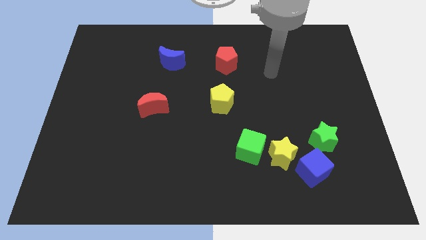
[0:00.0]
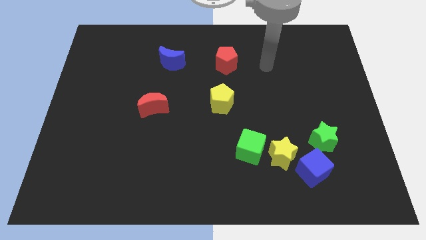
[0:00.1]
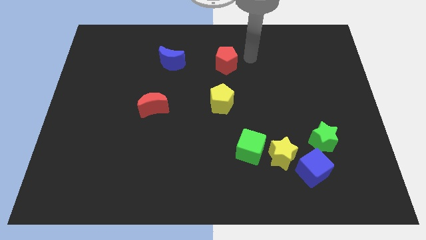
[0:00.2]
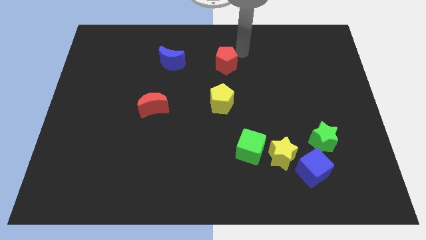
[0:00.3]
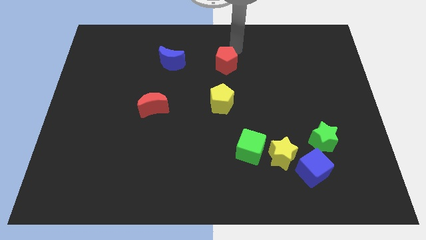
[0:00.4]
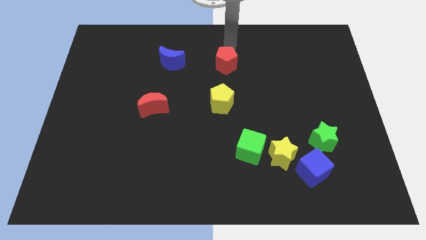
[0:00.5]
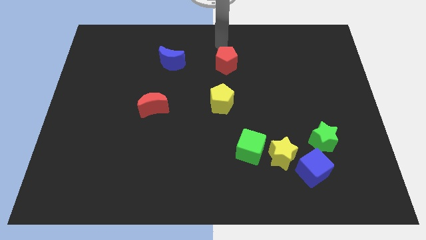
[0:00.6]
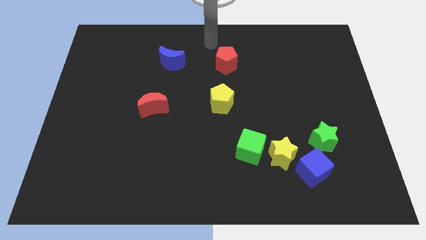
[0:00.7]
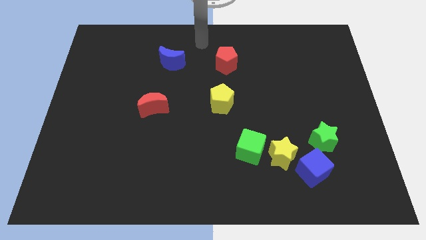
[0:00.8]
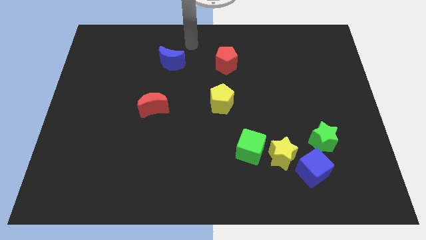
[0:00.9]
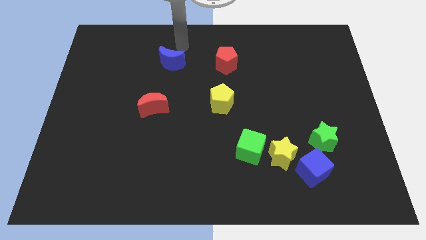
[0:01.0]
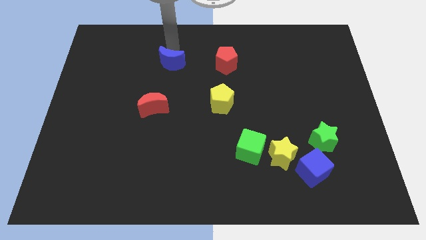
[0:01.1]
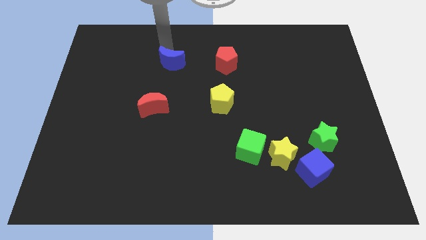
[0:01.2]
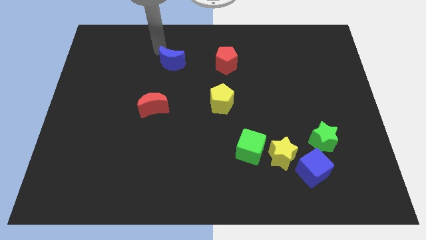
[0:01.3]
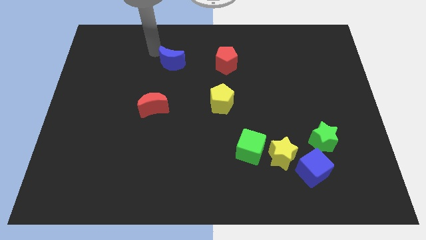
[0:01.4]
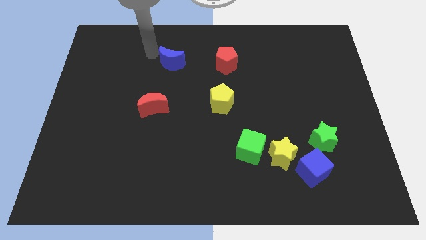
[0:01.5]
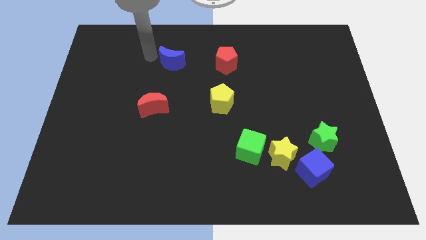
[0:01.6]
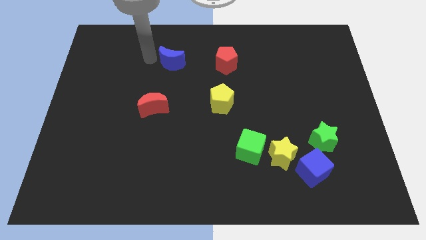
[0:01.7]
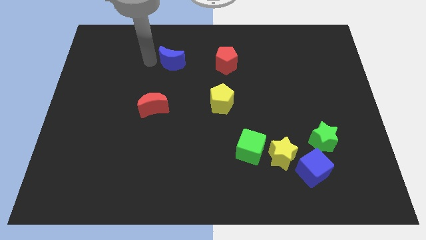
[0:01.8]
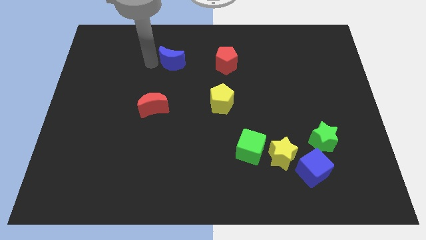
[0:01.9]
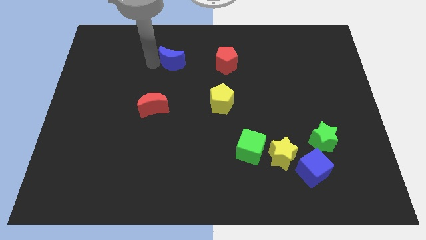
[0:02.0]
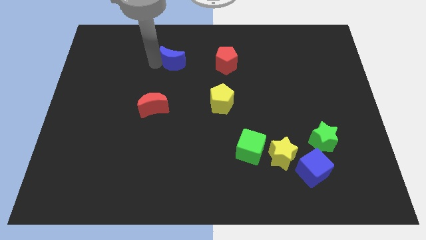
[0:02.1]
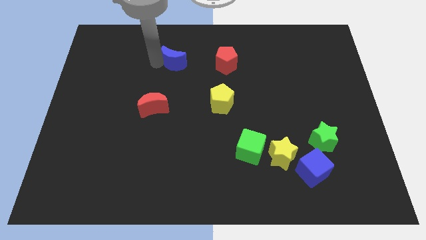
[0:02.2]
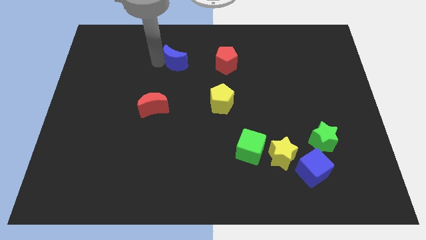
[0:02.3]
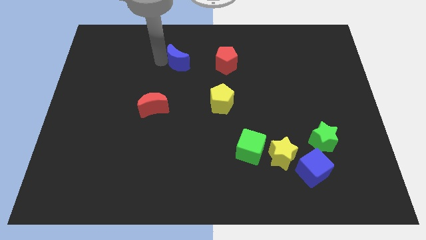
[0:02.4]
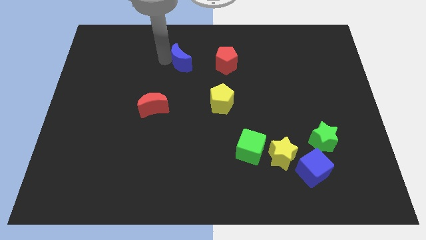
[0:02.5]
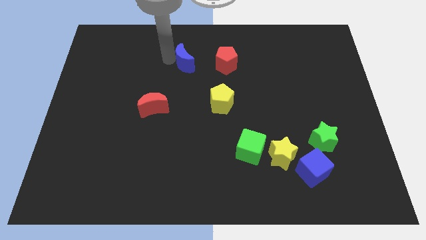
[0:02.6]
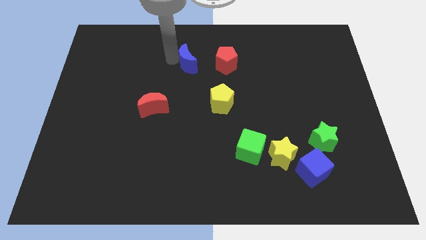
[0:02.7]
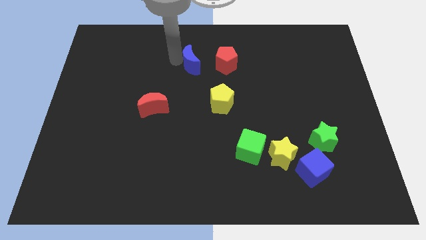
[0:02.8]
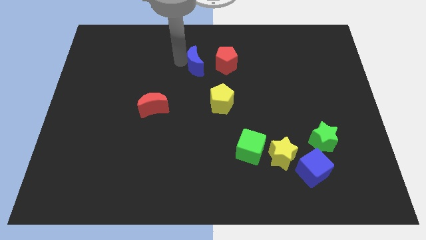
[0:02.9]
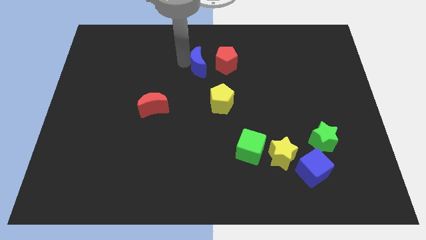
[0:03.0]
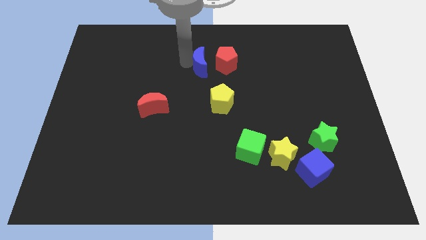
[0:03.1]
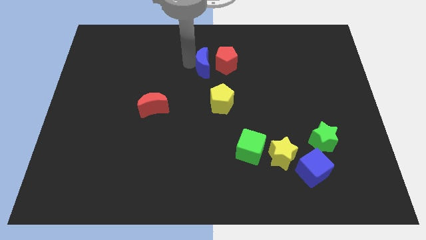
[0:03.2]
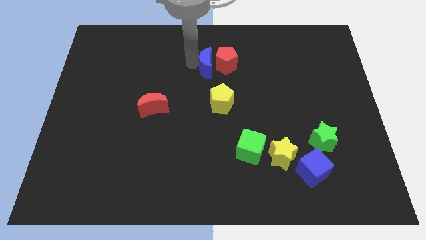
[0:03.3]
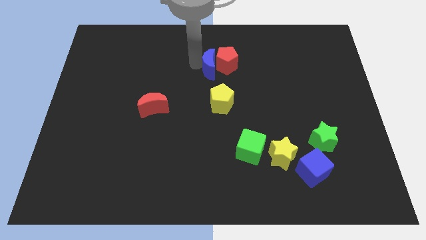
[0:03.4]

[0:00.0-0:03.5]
put the blue moon towards the red pentagon

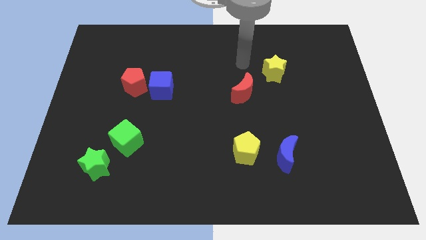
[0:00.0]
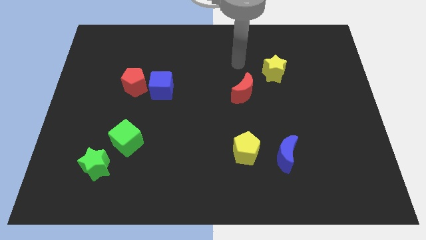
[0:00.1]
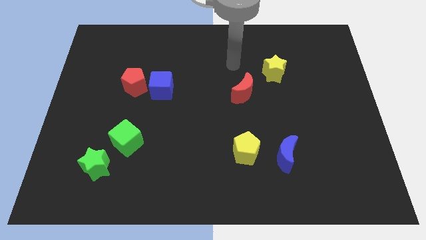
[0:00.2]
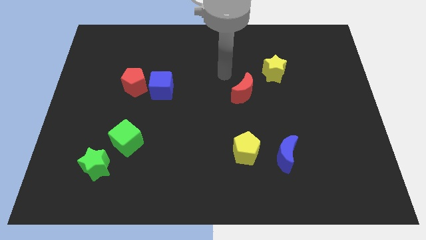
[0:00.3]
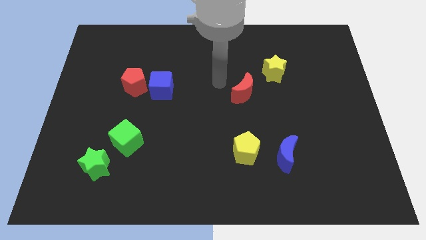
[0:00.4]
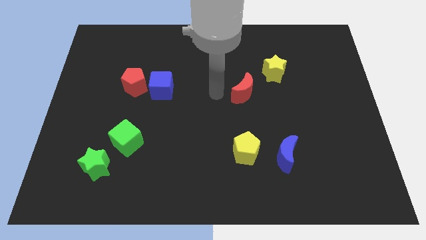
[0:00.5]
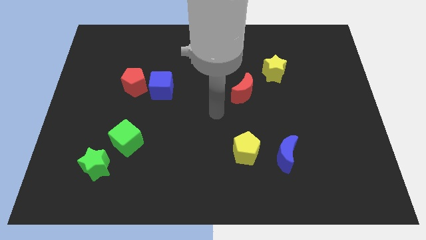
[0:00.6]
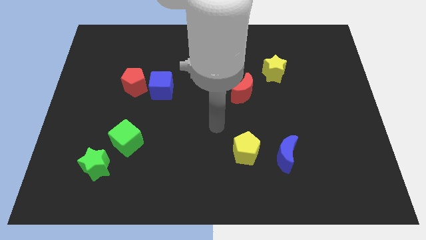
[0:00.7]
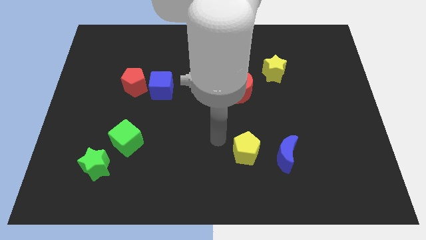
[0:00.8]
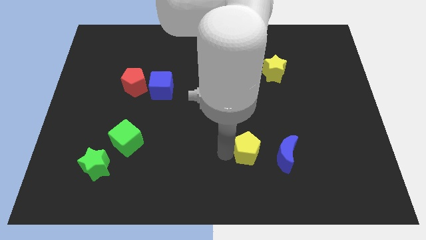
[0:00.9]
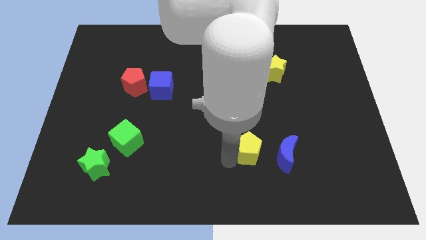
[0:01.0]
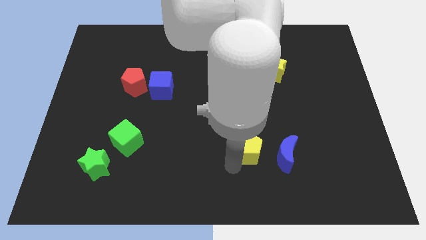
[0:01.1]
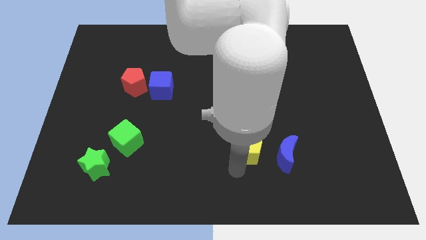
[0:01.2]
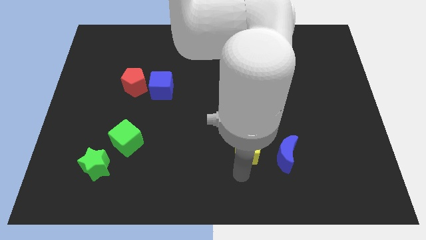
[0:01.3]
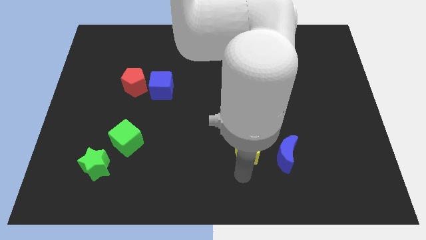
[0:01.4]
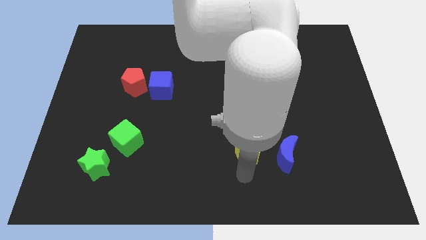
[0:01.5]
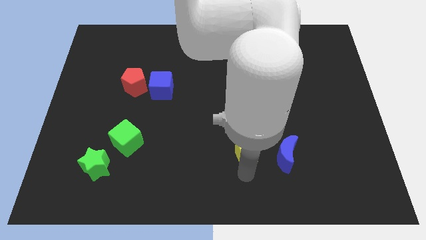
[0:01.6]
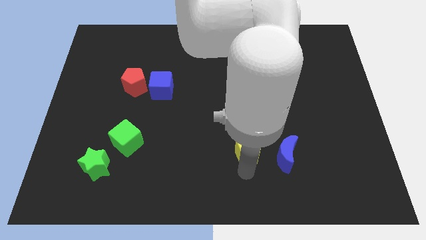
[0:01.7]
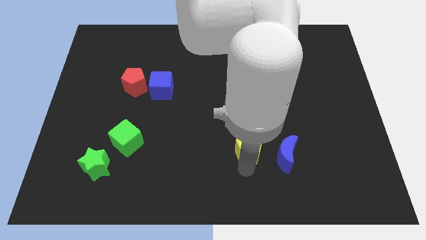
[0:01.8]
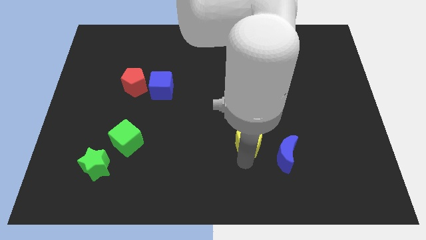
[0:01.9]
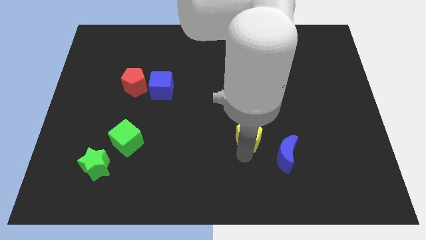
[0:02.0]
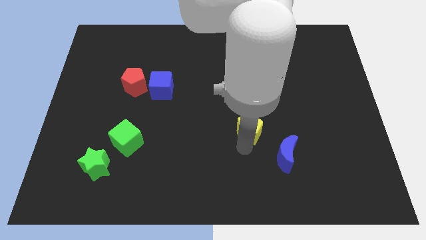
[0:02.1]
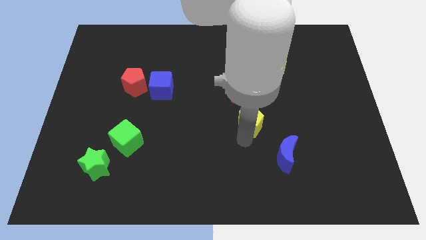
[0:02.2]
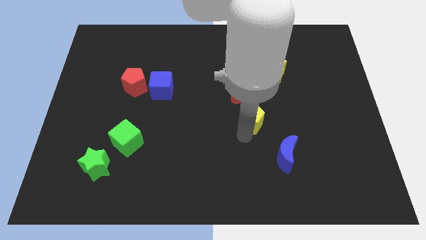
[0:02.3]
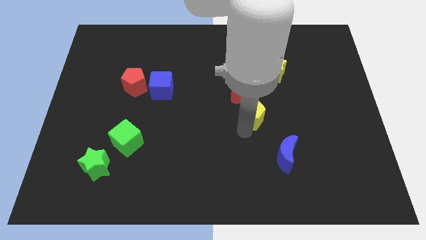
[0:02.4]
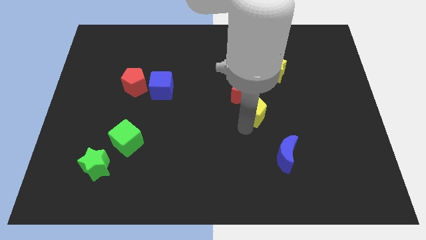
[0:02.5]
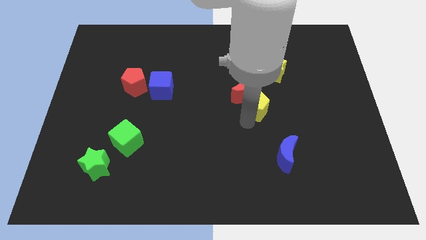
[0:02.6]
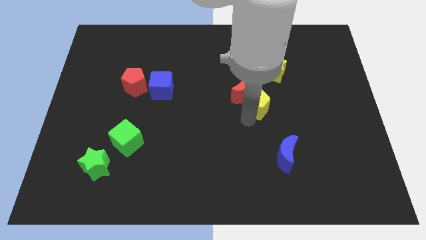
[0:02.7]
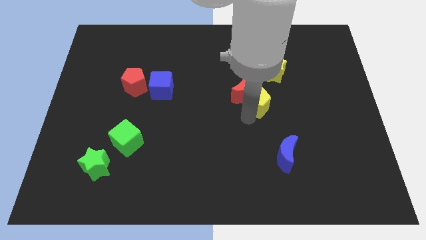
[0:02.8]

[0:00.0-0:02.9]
move the yellow pentagon close to the red moon

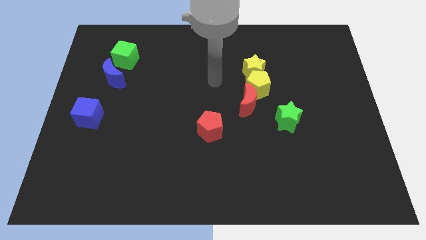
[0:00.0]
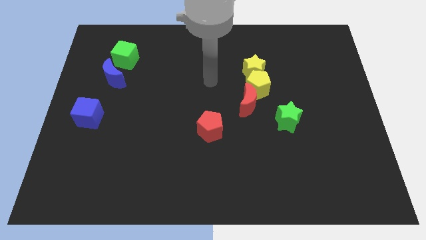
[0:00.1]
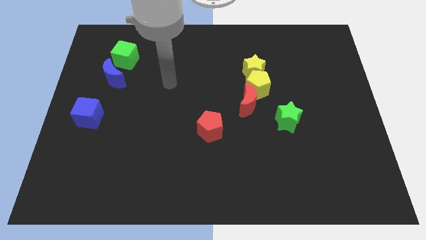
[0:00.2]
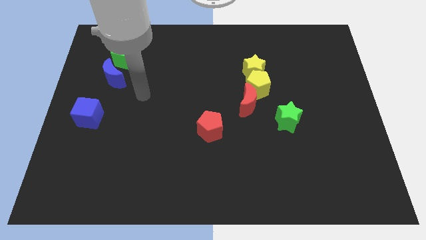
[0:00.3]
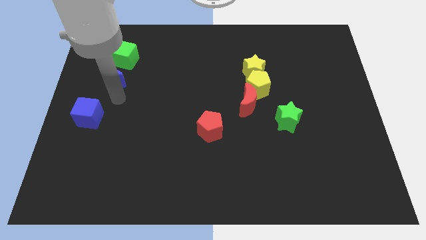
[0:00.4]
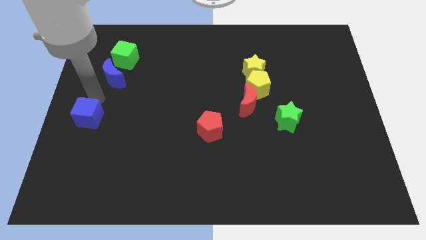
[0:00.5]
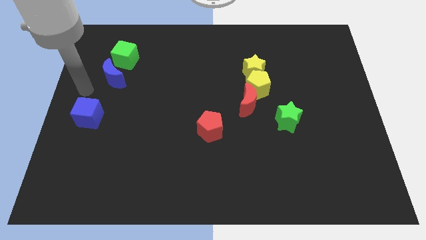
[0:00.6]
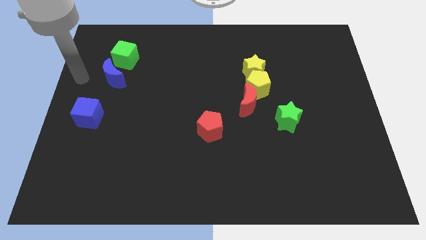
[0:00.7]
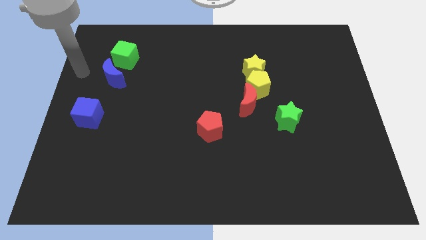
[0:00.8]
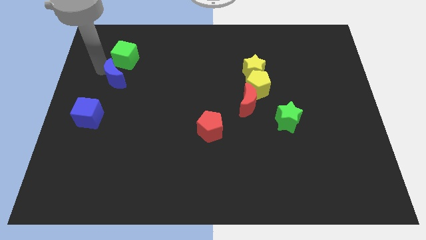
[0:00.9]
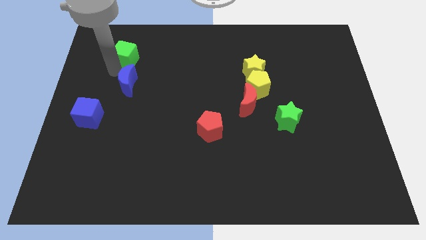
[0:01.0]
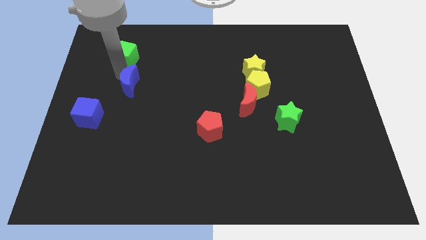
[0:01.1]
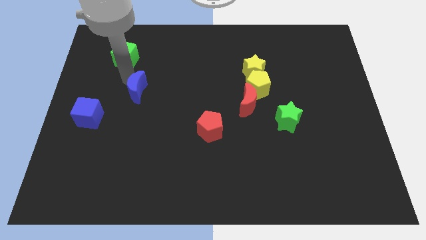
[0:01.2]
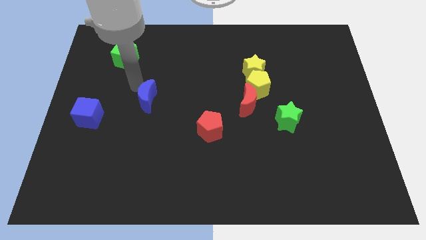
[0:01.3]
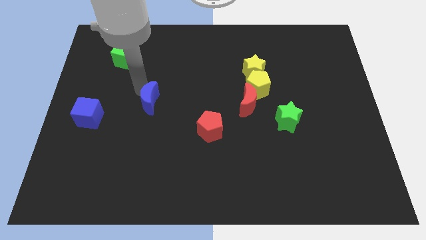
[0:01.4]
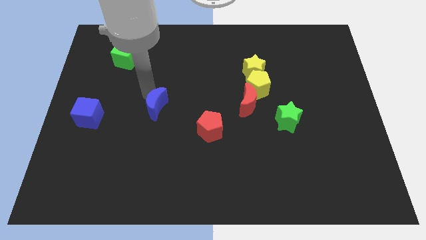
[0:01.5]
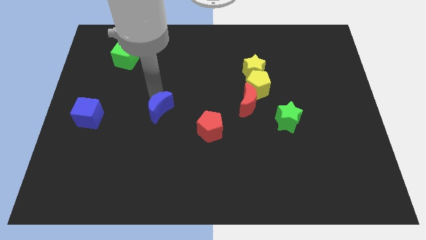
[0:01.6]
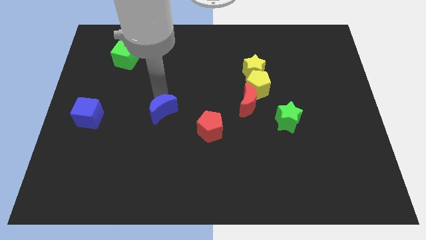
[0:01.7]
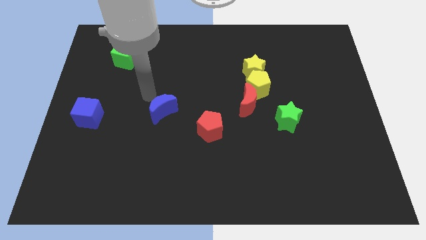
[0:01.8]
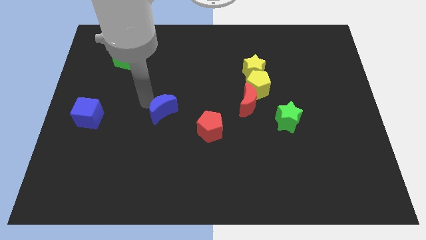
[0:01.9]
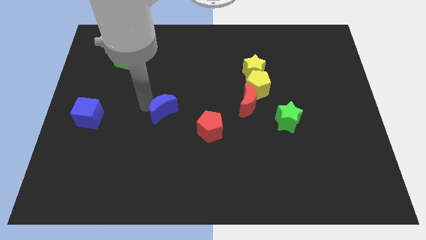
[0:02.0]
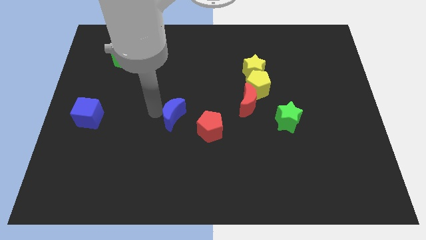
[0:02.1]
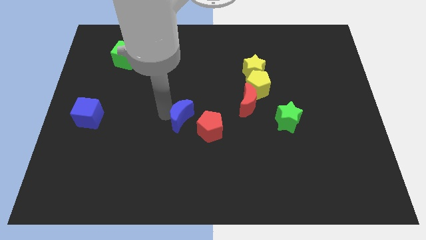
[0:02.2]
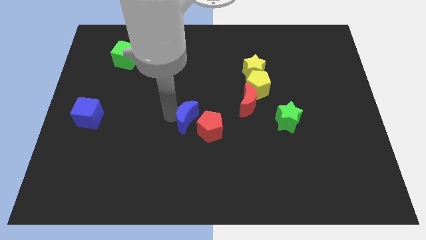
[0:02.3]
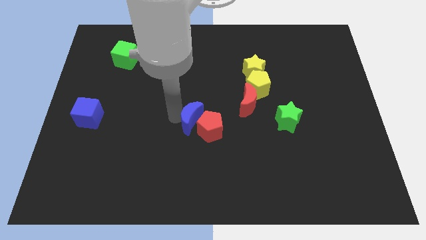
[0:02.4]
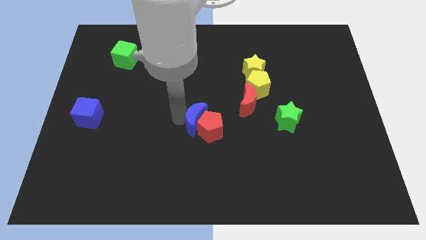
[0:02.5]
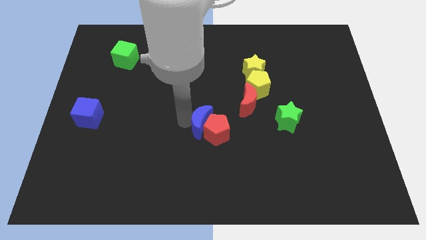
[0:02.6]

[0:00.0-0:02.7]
move the blue moon next to the red pentagon
